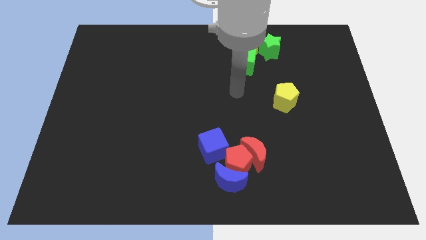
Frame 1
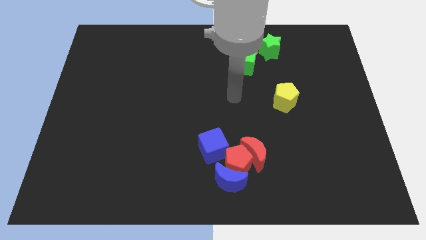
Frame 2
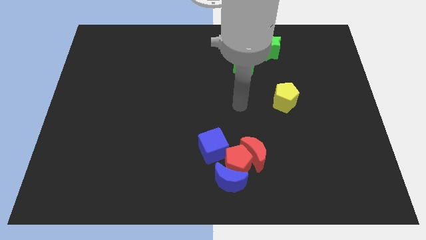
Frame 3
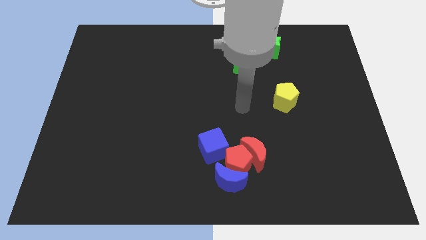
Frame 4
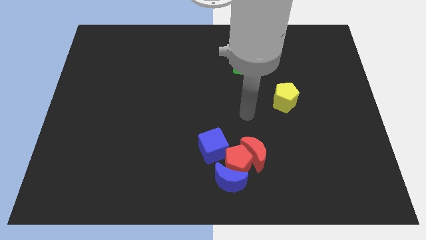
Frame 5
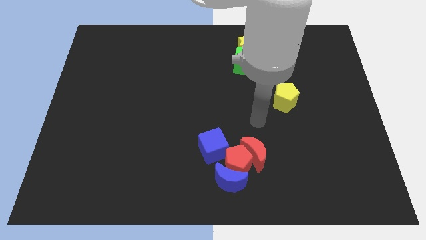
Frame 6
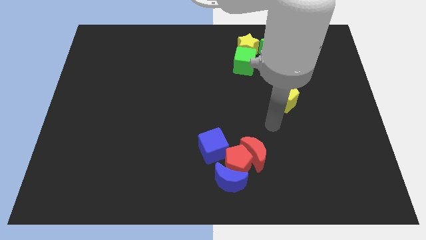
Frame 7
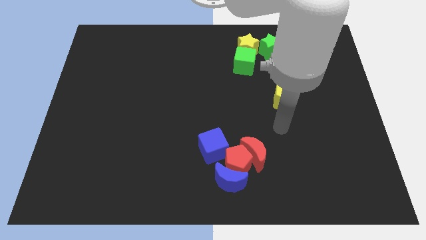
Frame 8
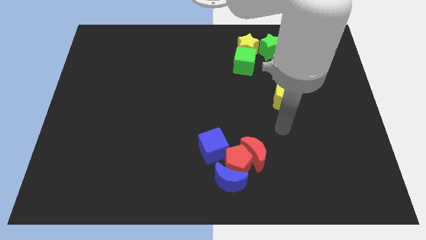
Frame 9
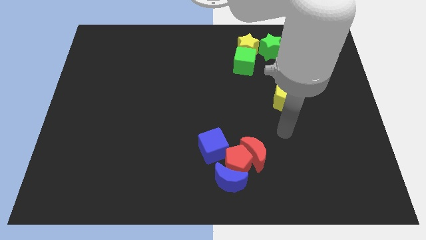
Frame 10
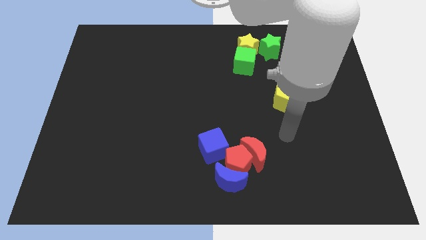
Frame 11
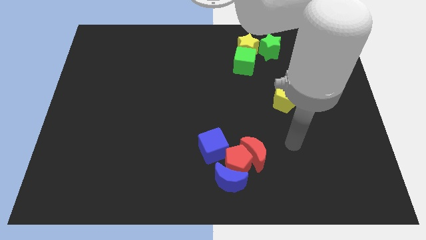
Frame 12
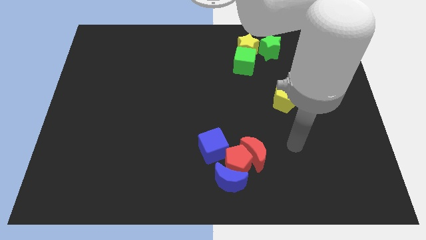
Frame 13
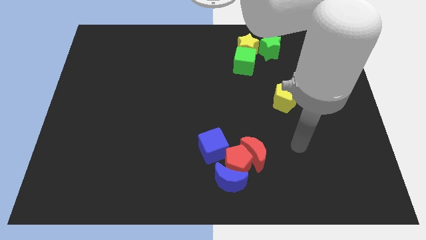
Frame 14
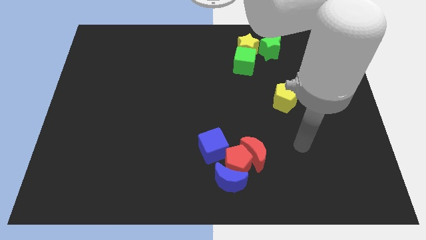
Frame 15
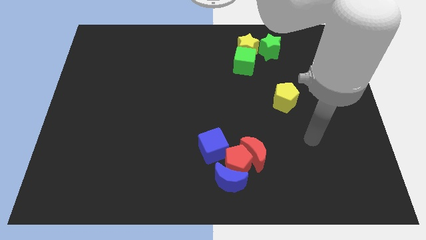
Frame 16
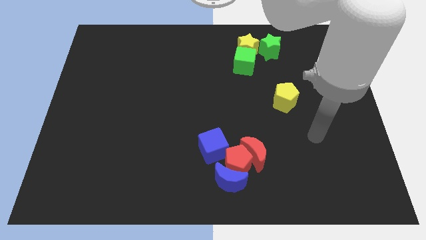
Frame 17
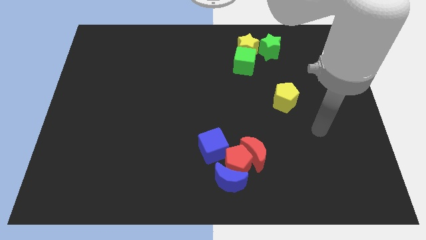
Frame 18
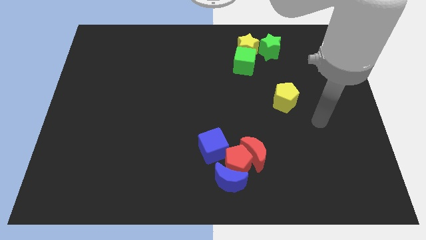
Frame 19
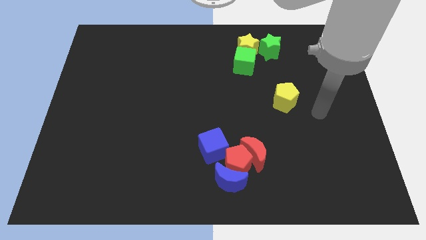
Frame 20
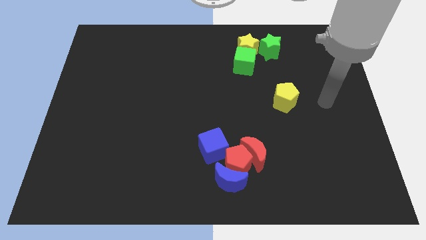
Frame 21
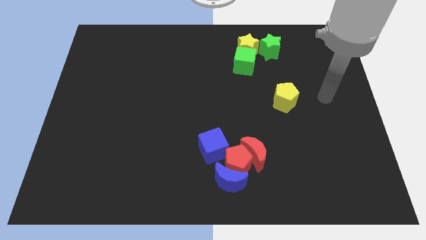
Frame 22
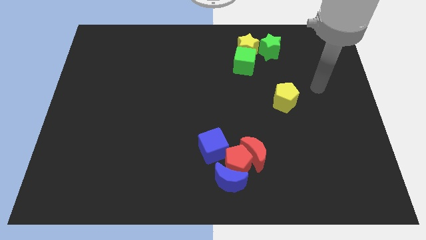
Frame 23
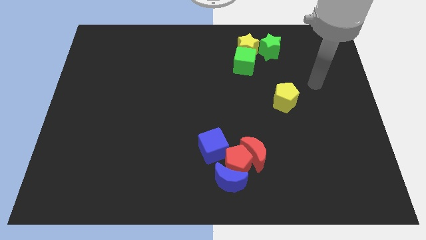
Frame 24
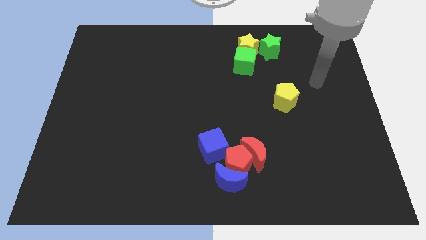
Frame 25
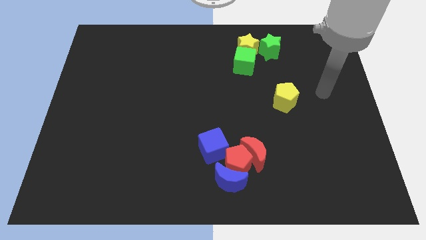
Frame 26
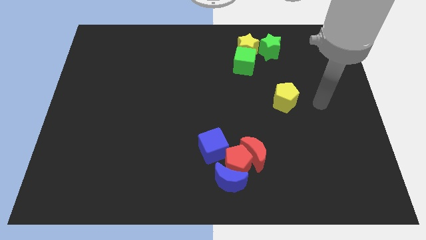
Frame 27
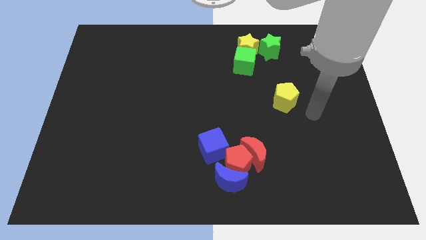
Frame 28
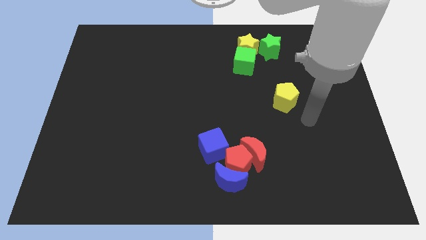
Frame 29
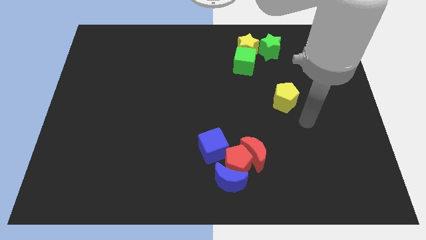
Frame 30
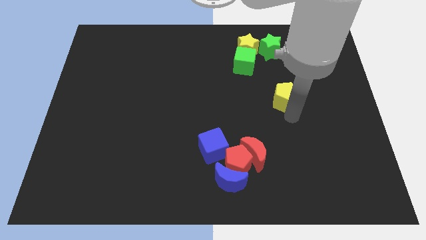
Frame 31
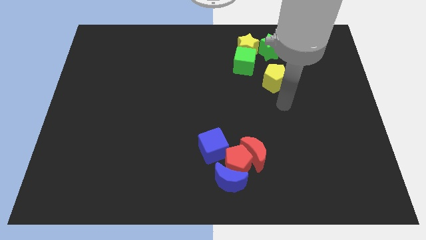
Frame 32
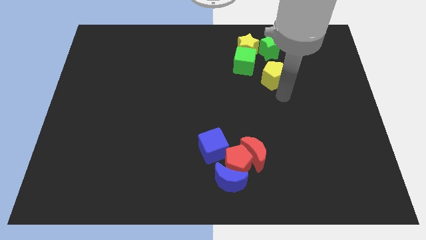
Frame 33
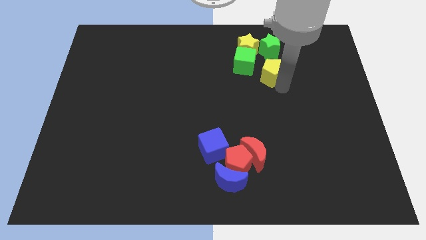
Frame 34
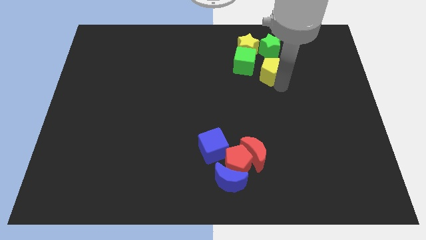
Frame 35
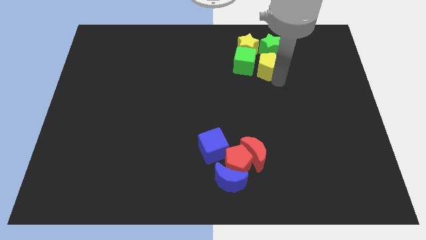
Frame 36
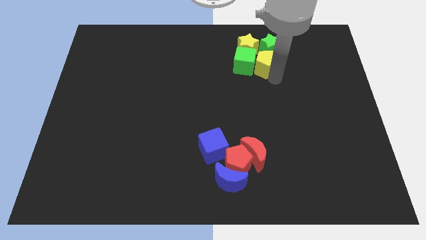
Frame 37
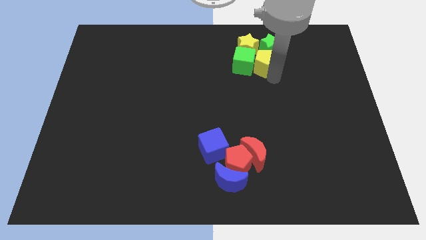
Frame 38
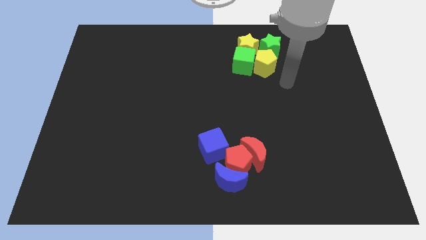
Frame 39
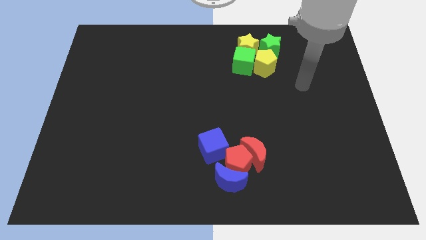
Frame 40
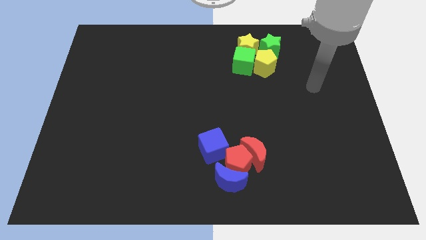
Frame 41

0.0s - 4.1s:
push the yellow pentagon to the right of the green cube

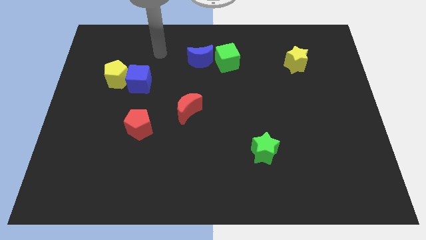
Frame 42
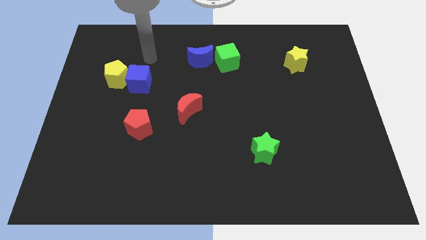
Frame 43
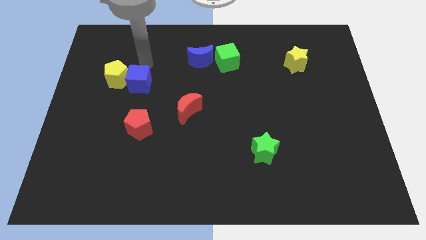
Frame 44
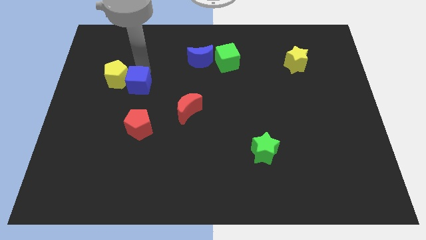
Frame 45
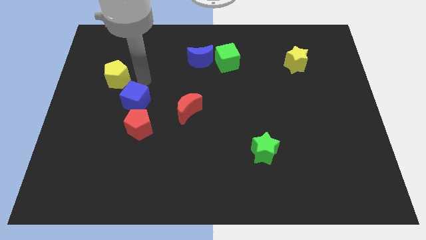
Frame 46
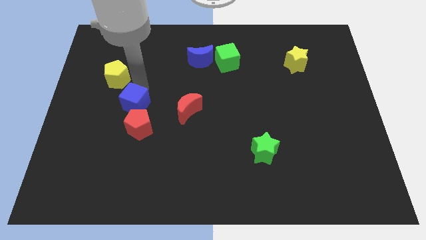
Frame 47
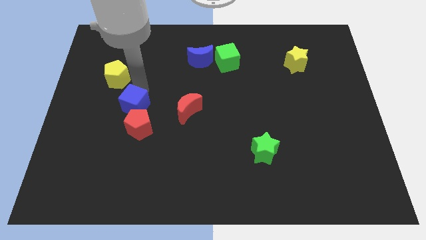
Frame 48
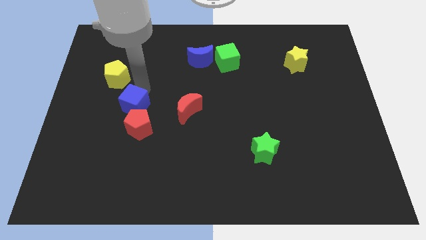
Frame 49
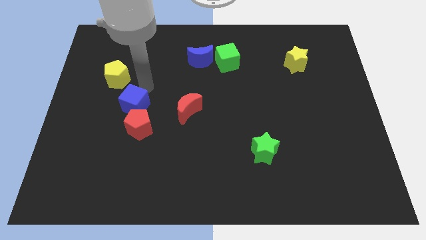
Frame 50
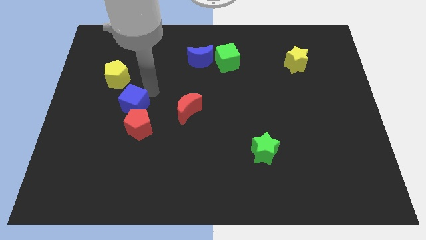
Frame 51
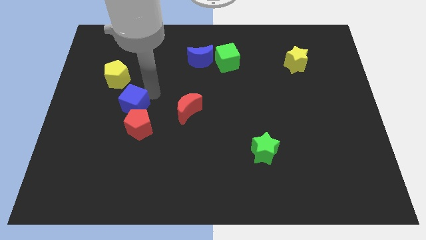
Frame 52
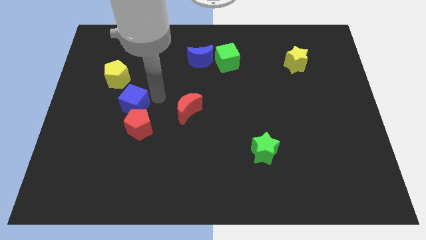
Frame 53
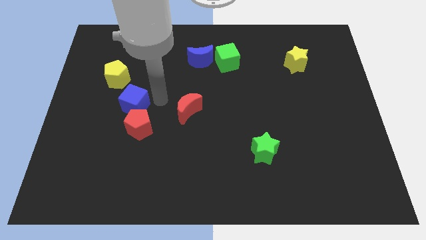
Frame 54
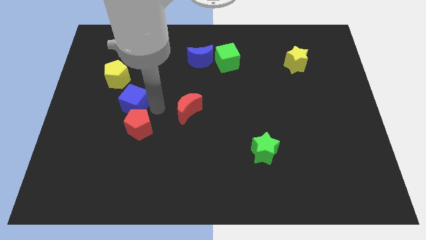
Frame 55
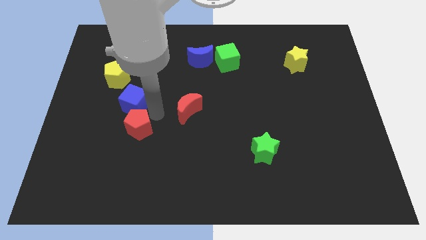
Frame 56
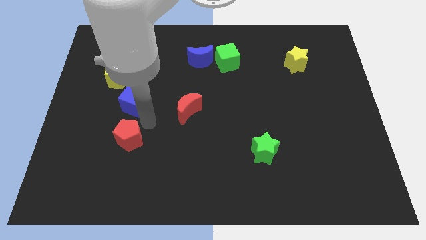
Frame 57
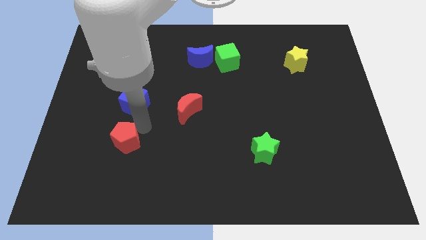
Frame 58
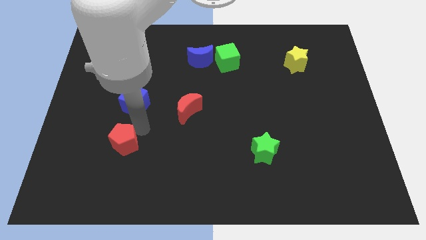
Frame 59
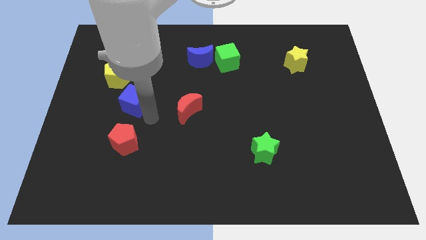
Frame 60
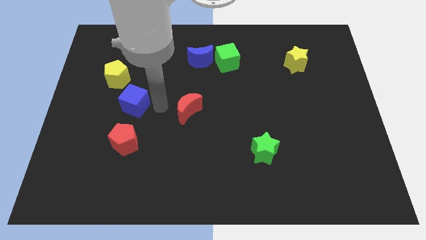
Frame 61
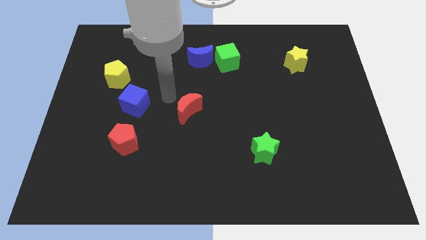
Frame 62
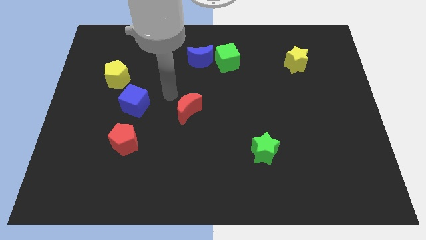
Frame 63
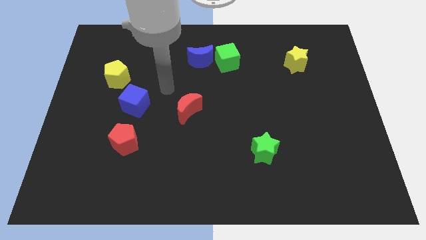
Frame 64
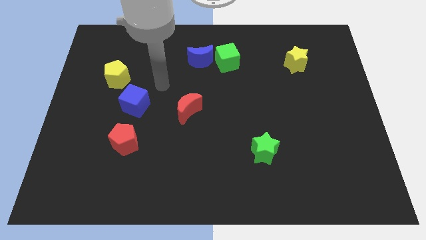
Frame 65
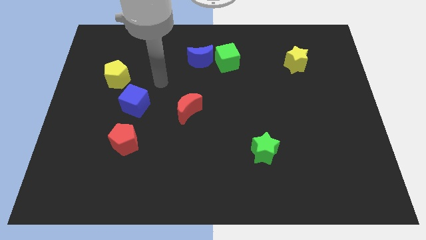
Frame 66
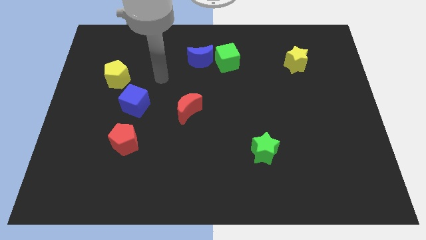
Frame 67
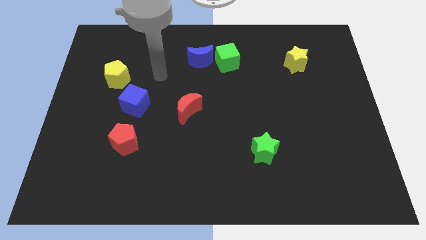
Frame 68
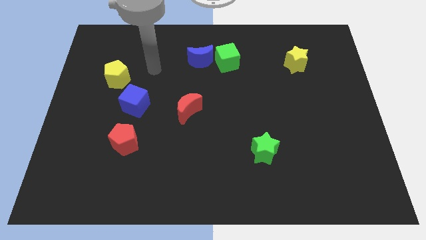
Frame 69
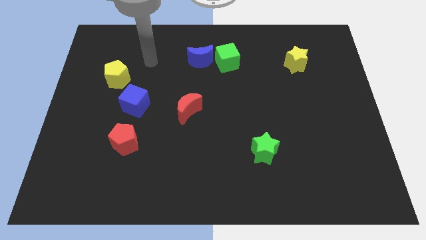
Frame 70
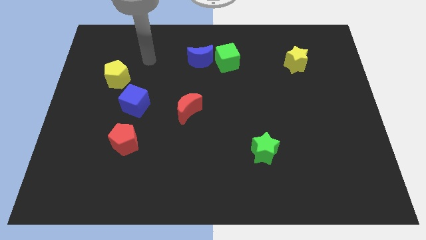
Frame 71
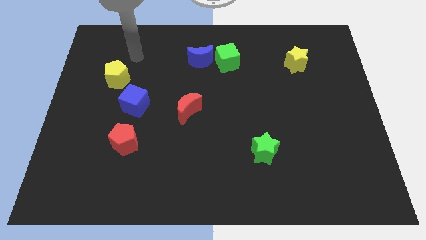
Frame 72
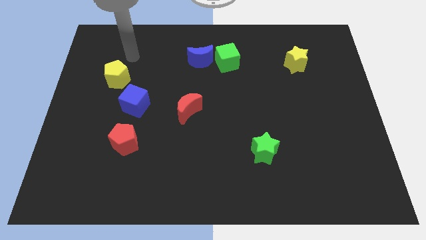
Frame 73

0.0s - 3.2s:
place the blue cube and red pentagon in a vertical line

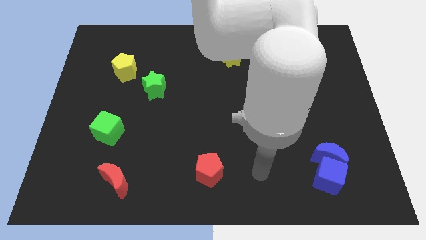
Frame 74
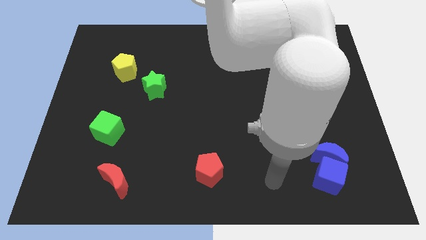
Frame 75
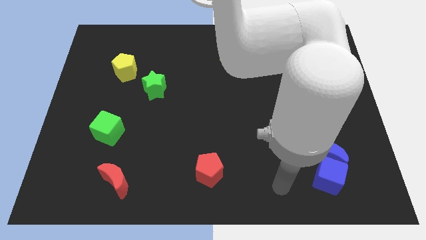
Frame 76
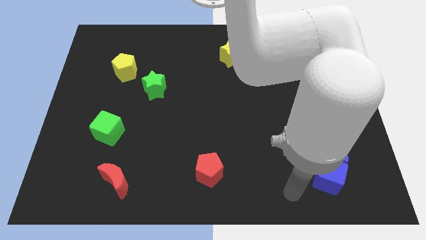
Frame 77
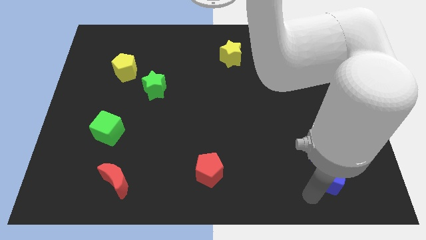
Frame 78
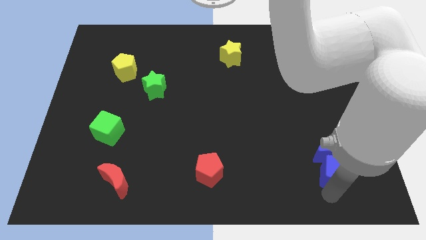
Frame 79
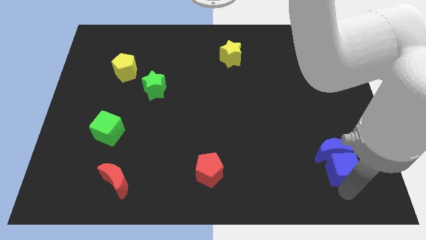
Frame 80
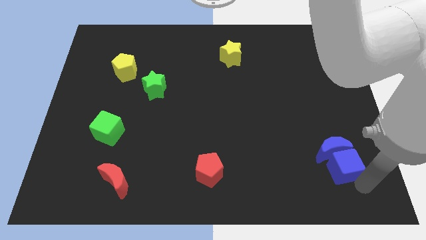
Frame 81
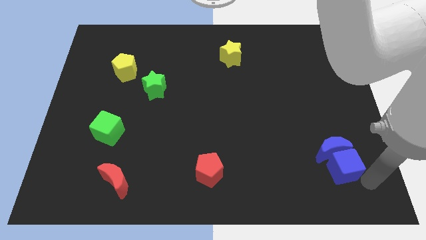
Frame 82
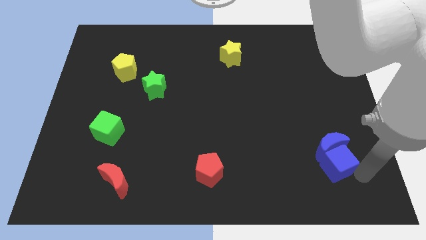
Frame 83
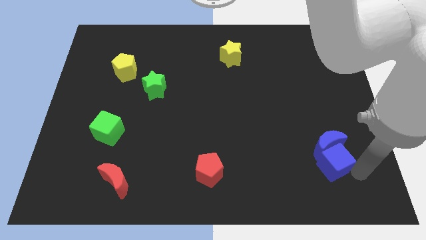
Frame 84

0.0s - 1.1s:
move the blue blocks diagonally to the left side

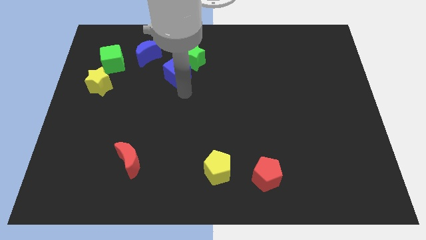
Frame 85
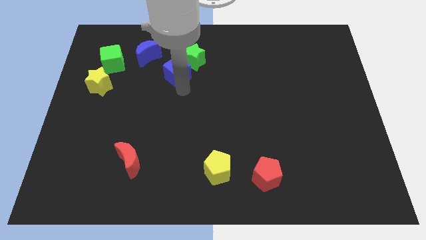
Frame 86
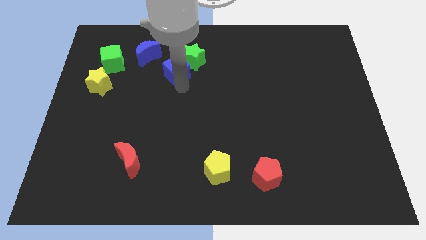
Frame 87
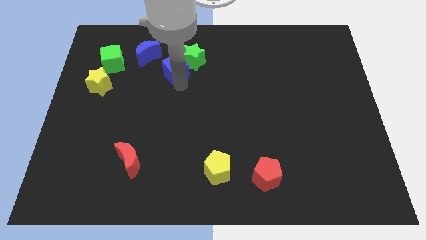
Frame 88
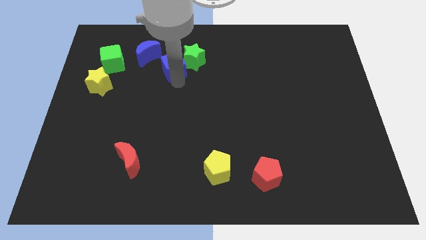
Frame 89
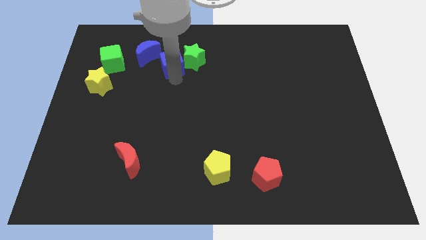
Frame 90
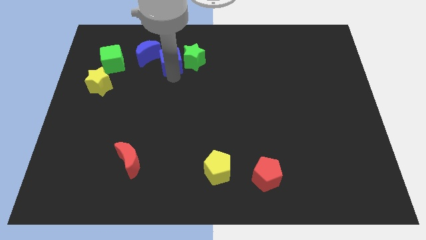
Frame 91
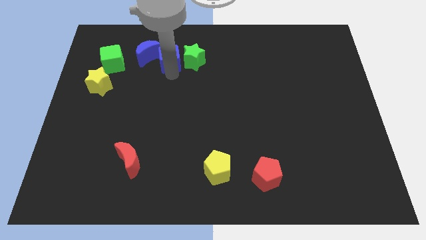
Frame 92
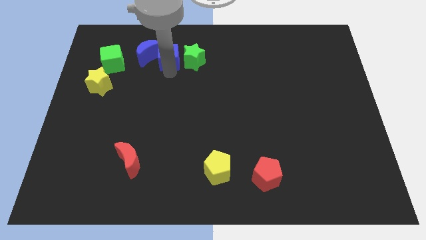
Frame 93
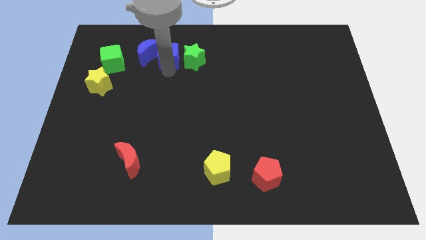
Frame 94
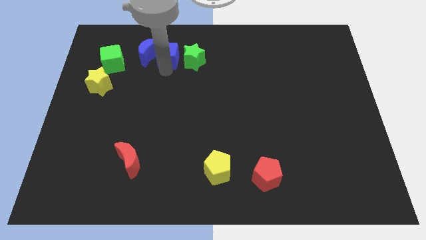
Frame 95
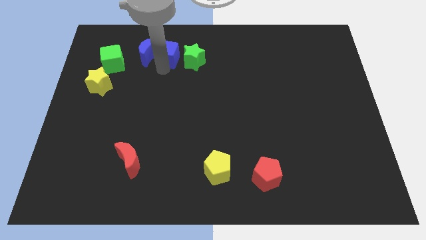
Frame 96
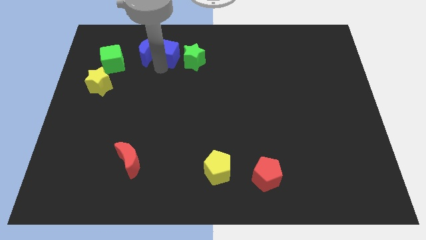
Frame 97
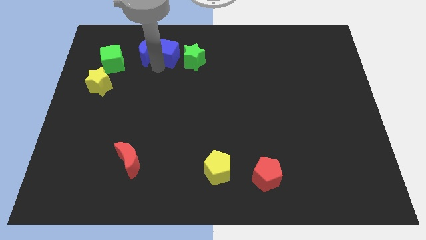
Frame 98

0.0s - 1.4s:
push the blue cube into the blue moon
